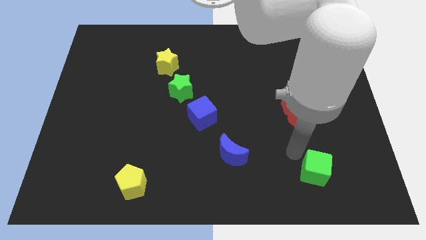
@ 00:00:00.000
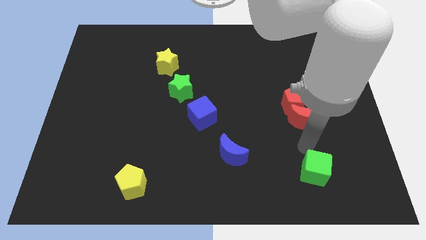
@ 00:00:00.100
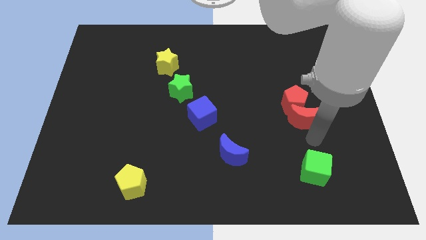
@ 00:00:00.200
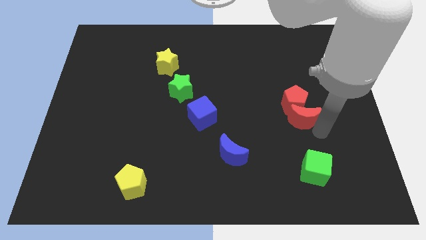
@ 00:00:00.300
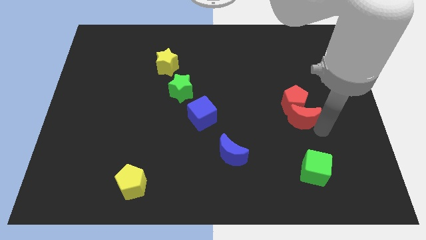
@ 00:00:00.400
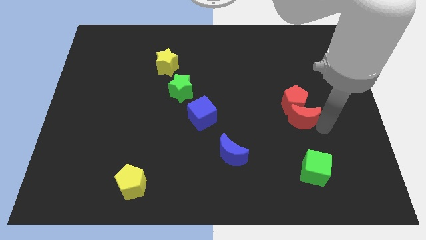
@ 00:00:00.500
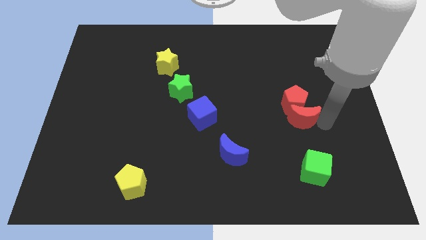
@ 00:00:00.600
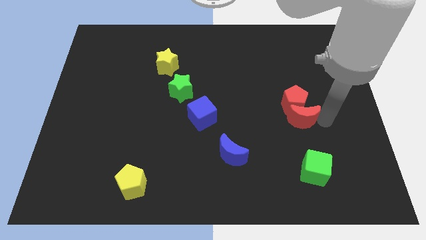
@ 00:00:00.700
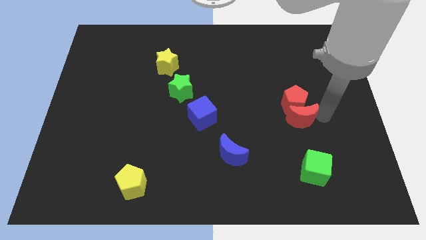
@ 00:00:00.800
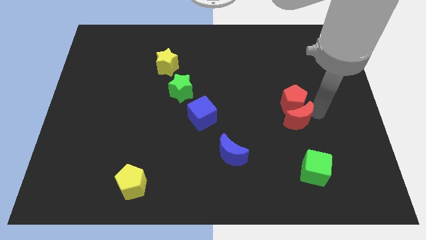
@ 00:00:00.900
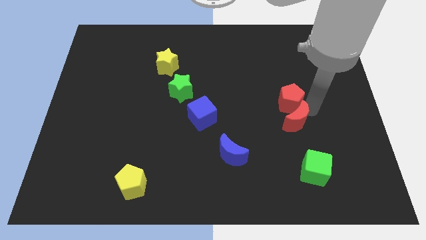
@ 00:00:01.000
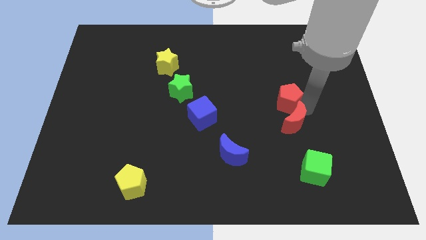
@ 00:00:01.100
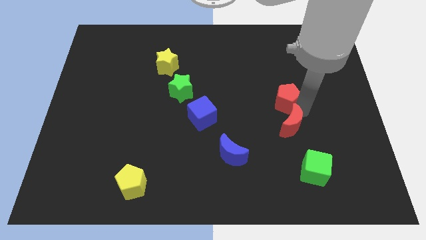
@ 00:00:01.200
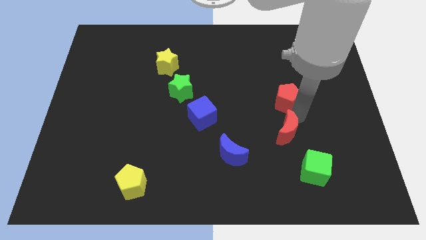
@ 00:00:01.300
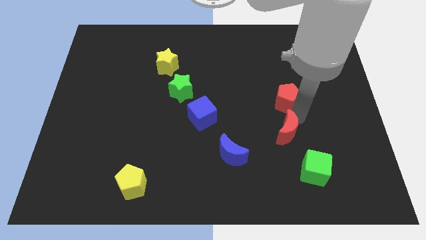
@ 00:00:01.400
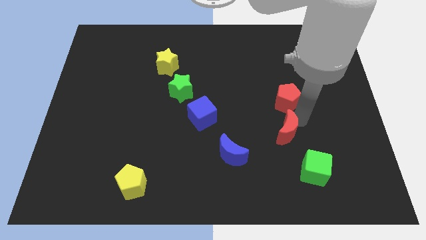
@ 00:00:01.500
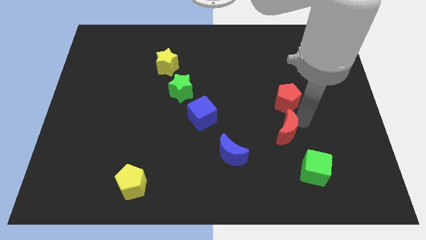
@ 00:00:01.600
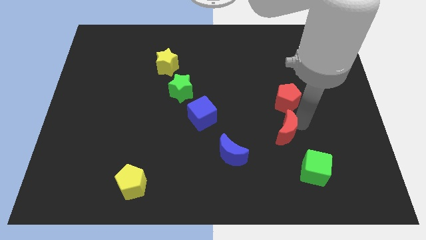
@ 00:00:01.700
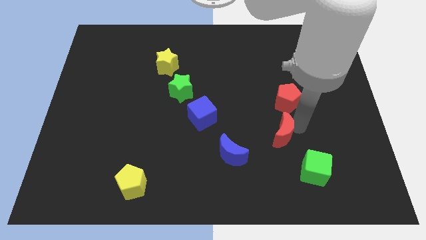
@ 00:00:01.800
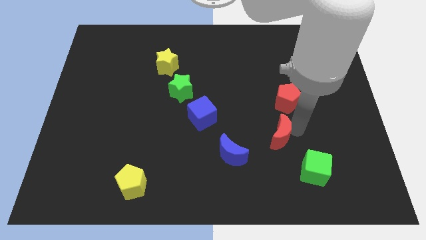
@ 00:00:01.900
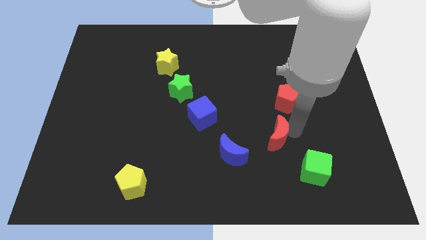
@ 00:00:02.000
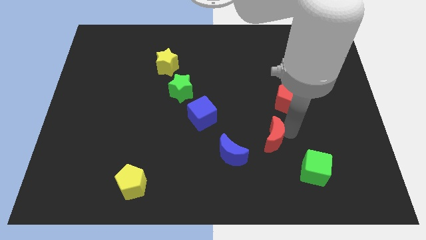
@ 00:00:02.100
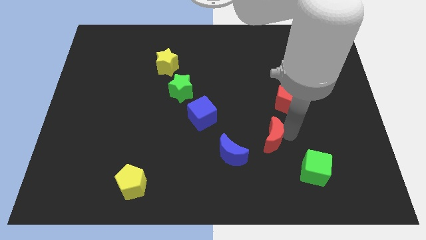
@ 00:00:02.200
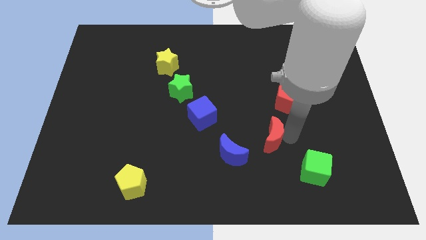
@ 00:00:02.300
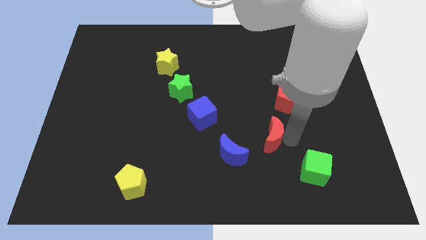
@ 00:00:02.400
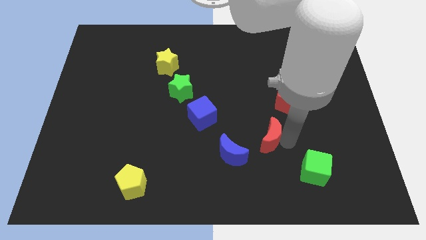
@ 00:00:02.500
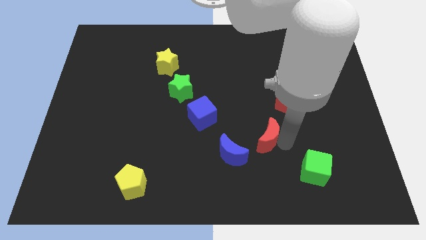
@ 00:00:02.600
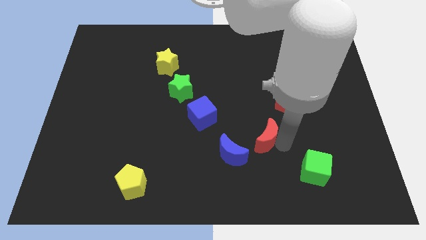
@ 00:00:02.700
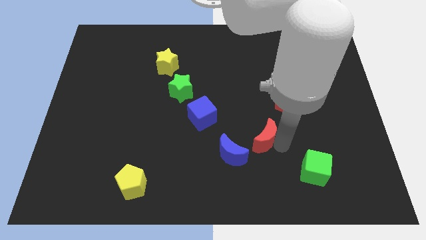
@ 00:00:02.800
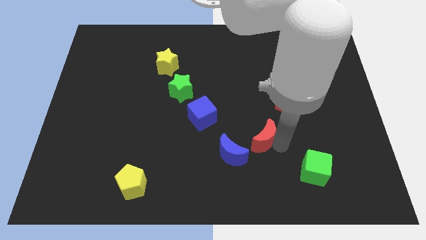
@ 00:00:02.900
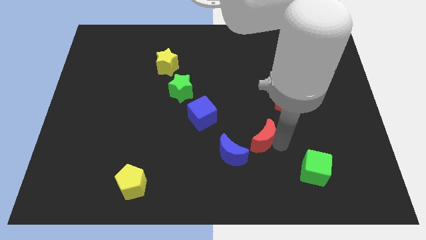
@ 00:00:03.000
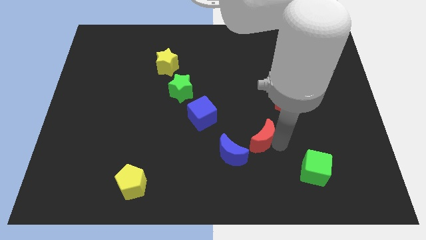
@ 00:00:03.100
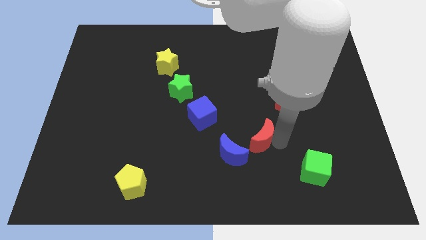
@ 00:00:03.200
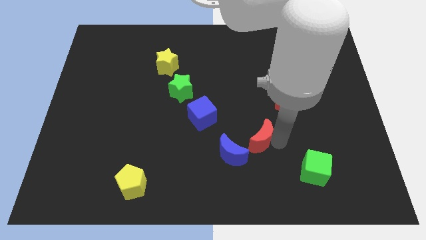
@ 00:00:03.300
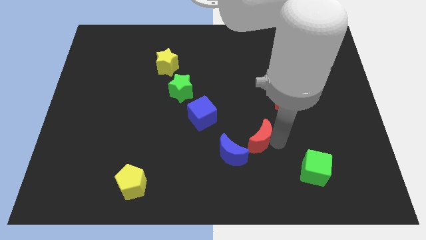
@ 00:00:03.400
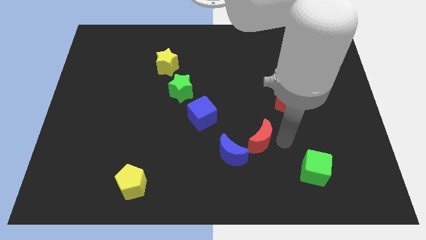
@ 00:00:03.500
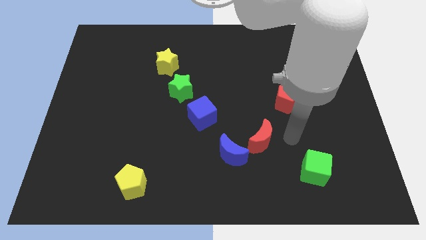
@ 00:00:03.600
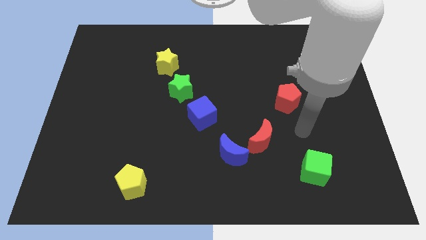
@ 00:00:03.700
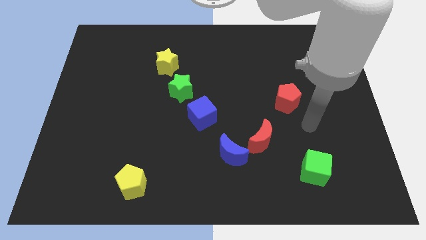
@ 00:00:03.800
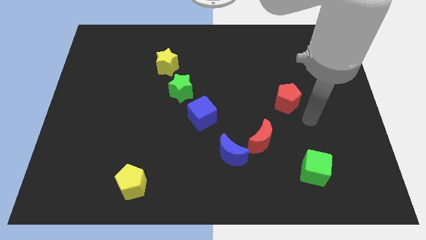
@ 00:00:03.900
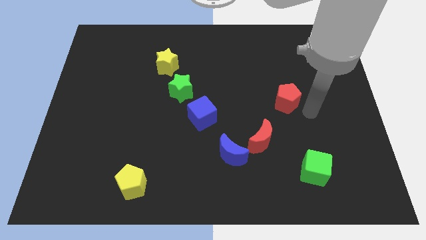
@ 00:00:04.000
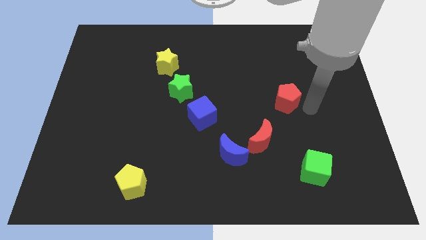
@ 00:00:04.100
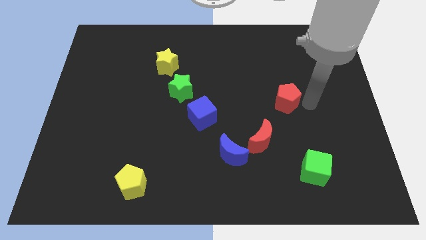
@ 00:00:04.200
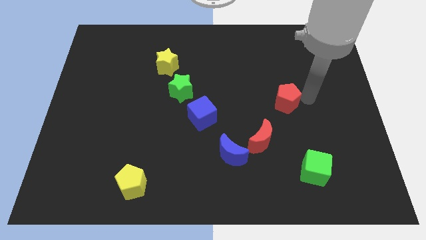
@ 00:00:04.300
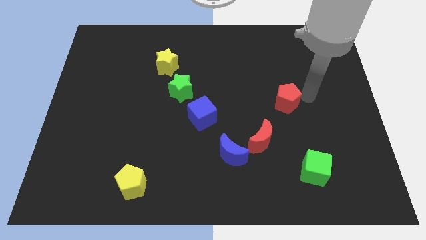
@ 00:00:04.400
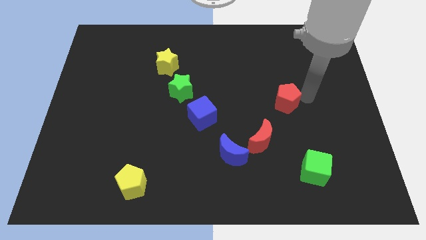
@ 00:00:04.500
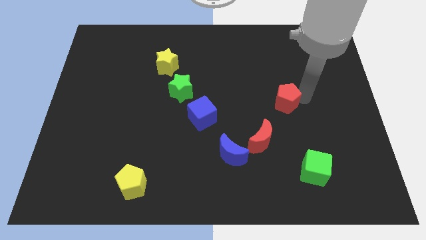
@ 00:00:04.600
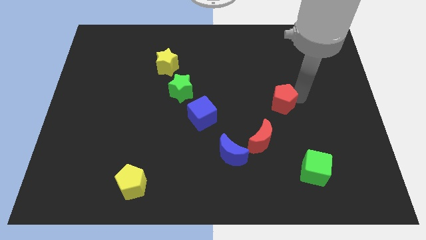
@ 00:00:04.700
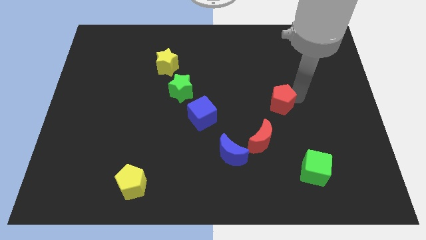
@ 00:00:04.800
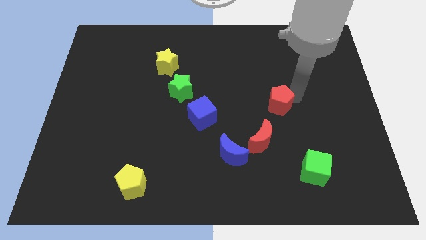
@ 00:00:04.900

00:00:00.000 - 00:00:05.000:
separate red moon and the red pentagon

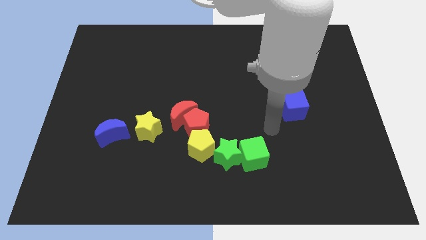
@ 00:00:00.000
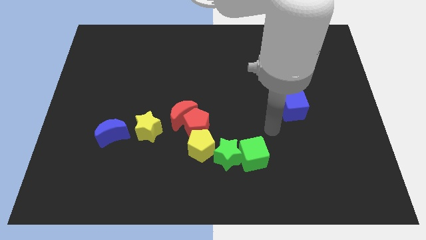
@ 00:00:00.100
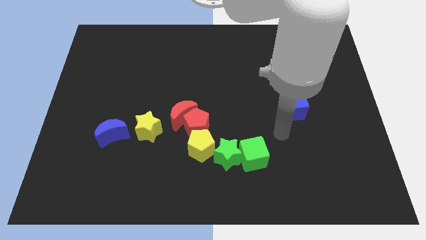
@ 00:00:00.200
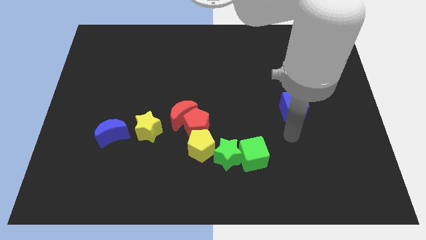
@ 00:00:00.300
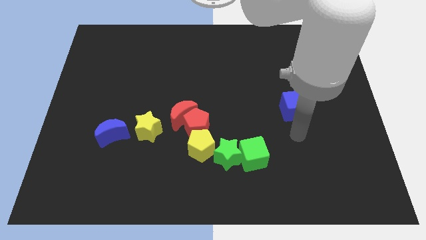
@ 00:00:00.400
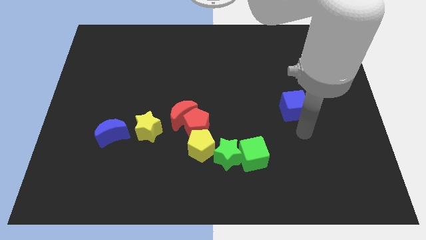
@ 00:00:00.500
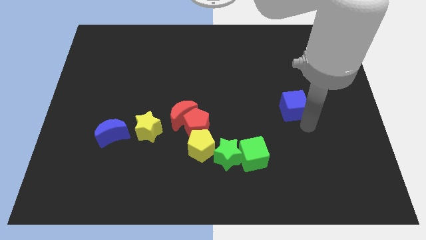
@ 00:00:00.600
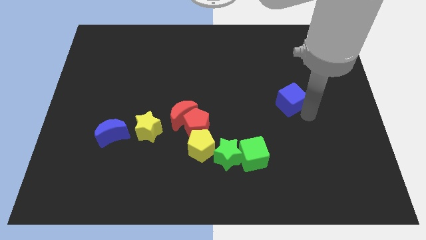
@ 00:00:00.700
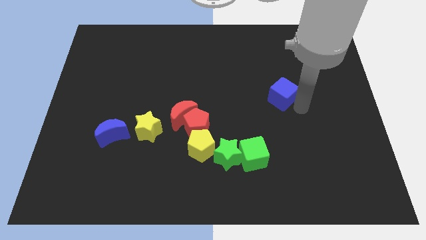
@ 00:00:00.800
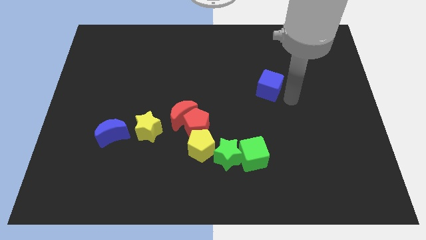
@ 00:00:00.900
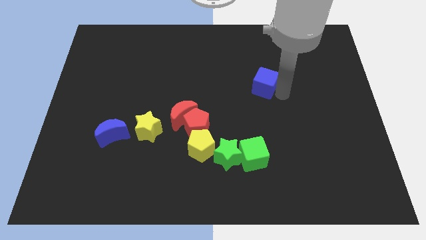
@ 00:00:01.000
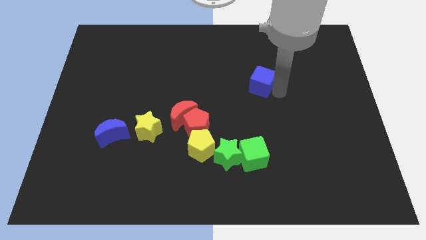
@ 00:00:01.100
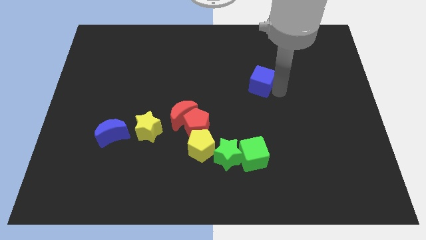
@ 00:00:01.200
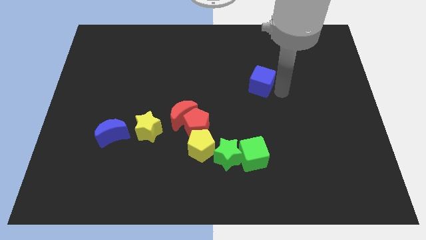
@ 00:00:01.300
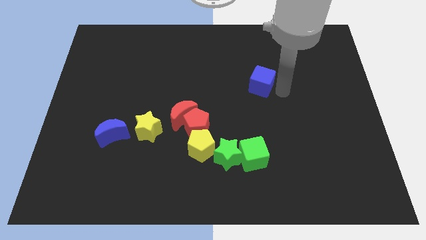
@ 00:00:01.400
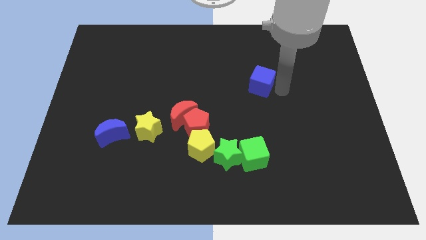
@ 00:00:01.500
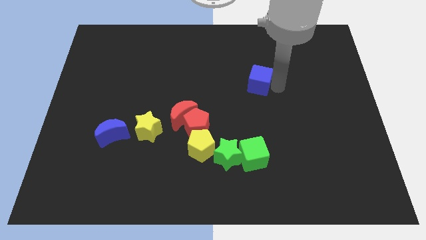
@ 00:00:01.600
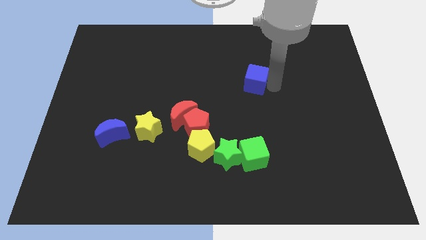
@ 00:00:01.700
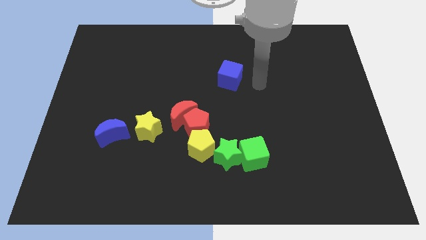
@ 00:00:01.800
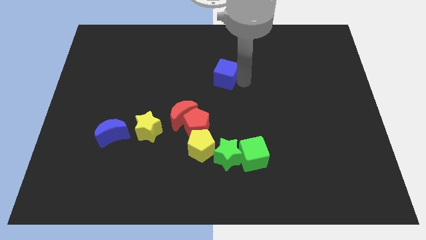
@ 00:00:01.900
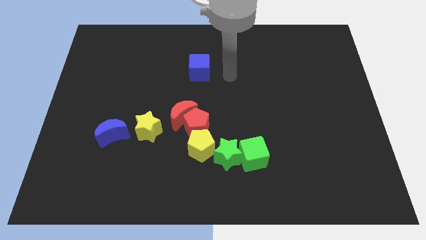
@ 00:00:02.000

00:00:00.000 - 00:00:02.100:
slide the blue cube vertically at the top of the green star

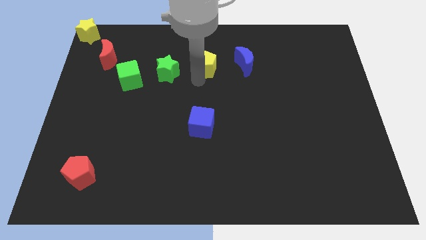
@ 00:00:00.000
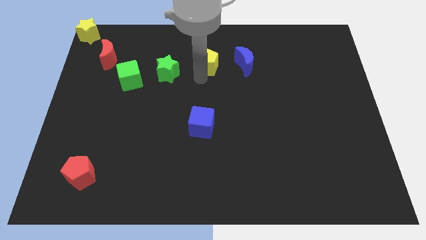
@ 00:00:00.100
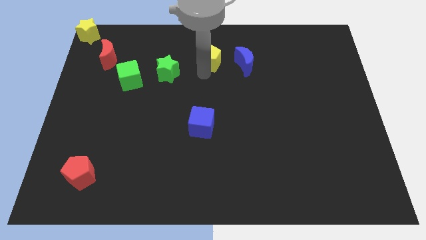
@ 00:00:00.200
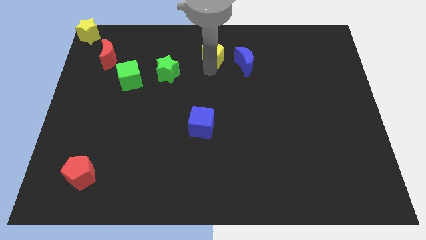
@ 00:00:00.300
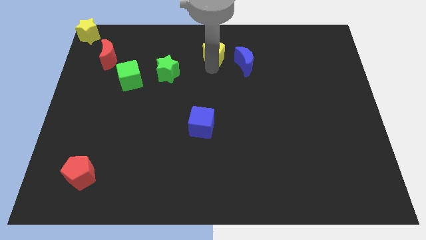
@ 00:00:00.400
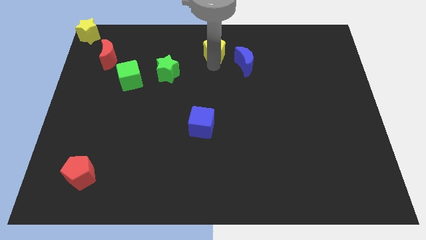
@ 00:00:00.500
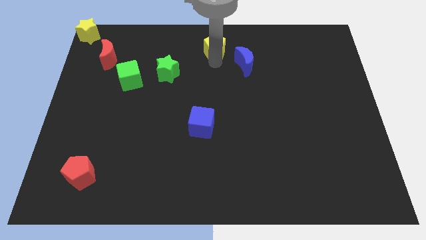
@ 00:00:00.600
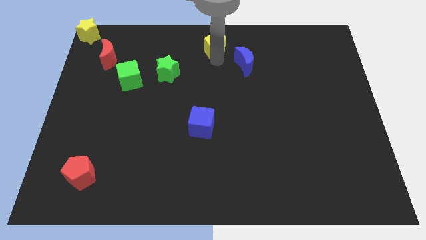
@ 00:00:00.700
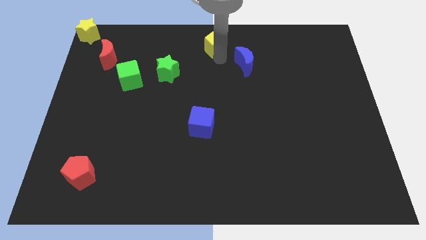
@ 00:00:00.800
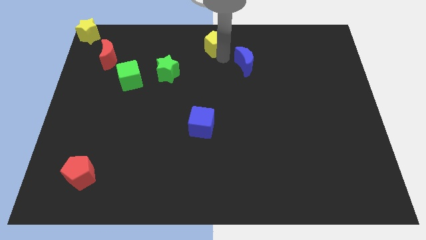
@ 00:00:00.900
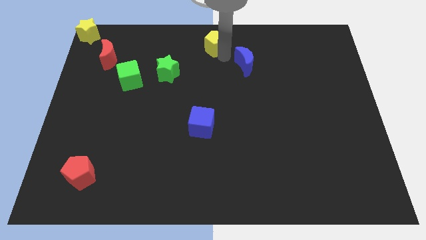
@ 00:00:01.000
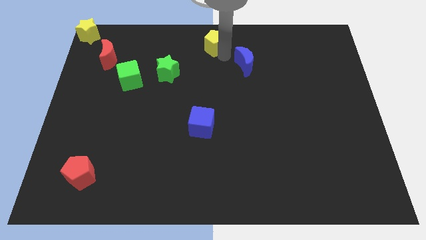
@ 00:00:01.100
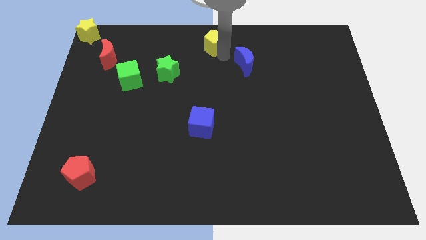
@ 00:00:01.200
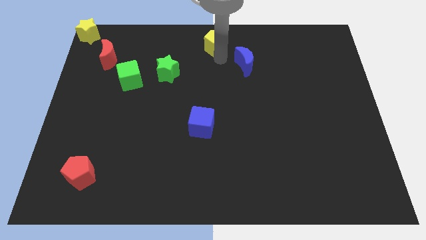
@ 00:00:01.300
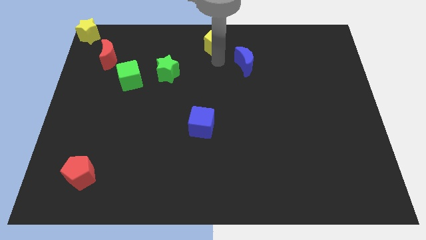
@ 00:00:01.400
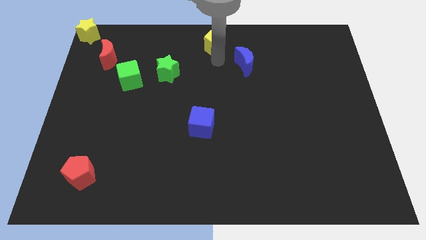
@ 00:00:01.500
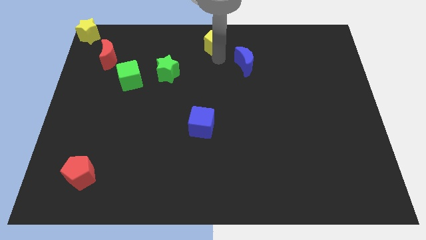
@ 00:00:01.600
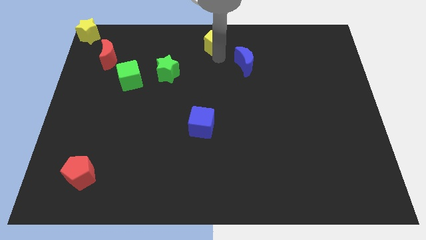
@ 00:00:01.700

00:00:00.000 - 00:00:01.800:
move the yellow pentagon to the top center of the board

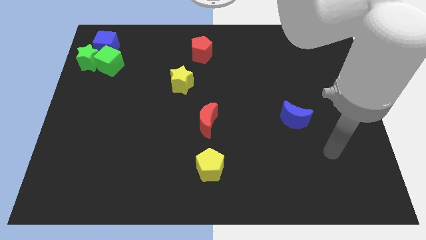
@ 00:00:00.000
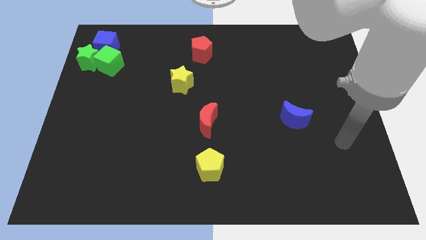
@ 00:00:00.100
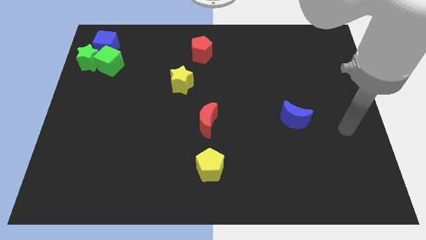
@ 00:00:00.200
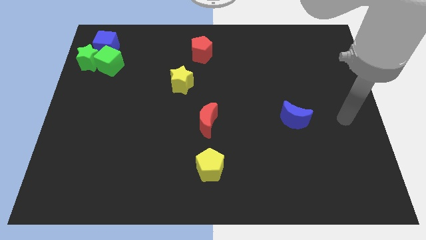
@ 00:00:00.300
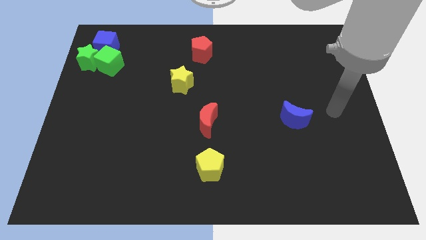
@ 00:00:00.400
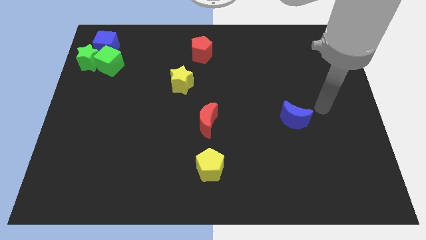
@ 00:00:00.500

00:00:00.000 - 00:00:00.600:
move the arm towards the right of the blue crescent
